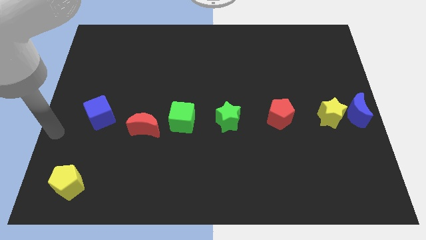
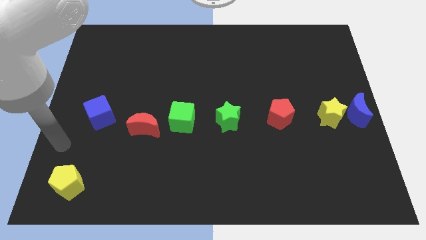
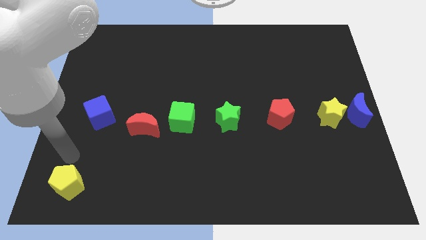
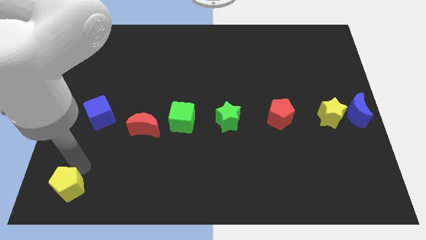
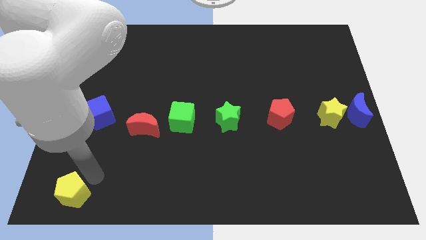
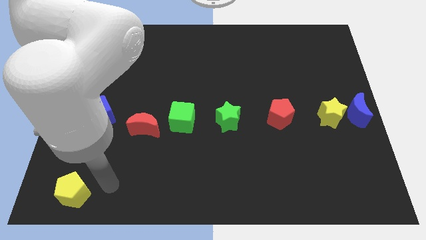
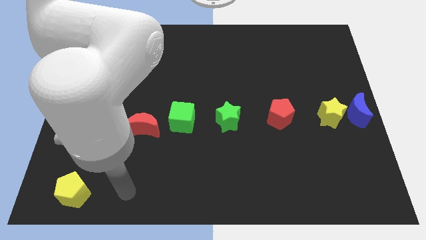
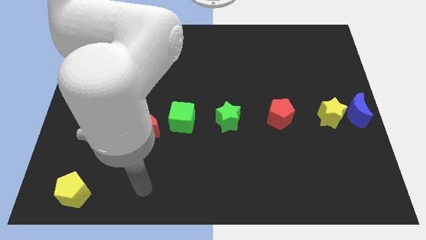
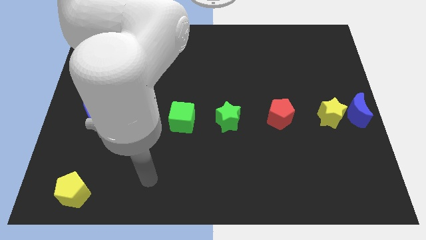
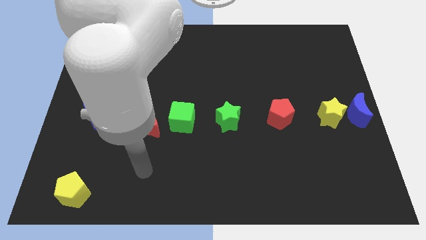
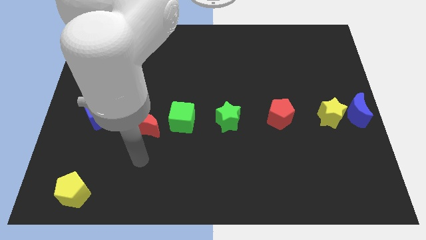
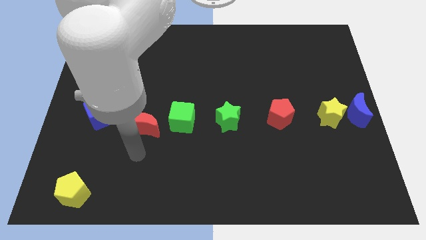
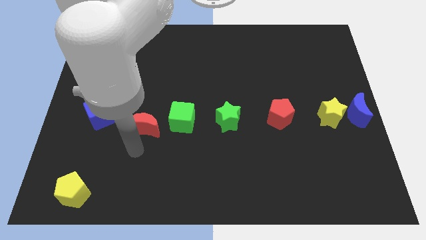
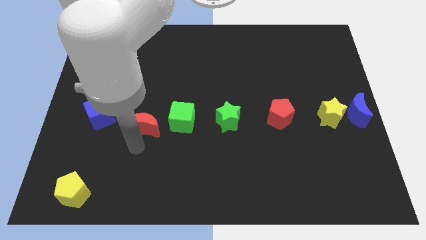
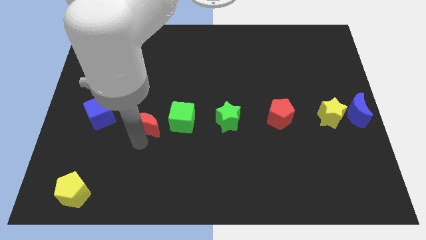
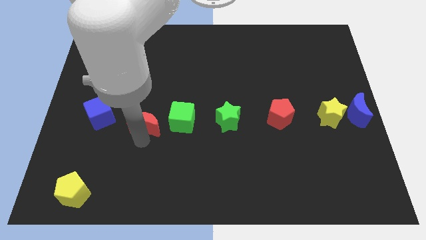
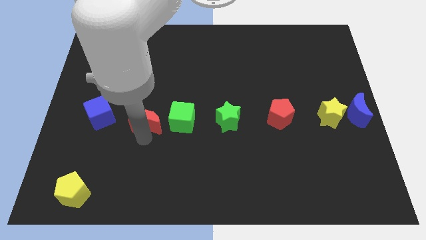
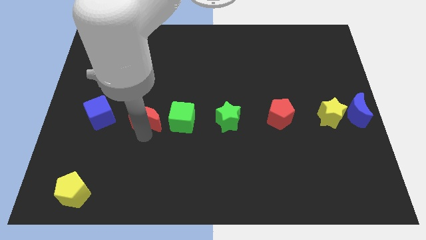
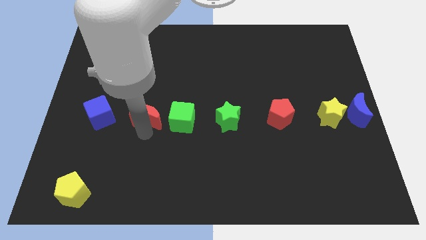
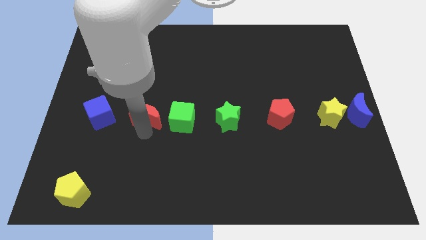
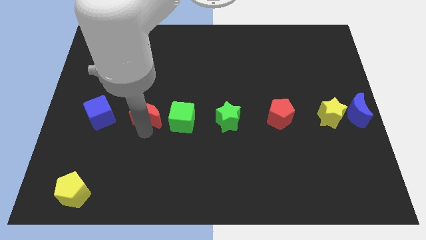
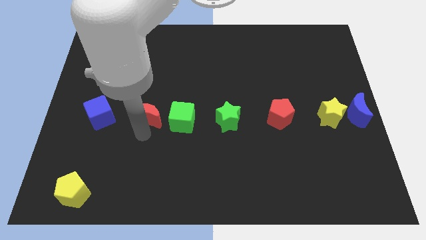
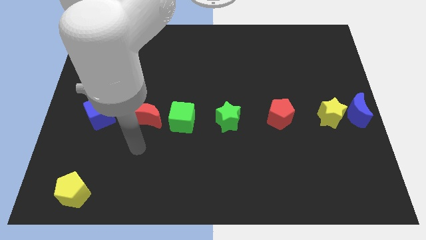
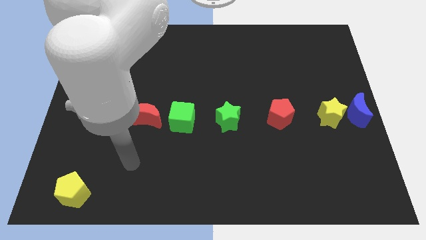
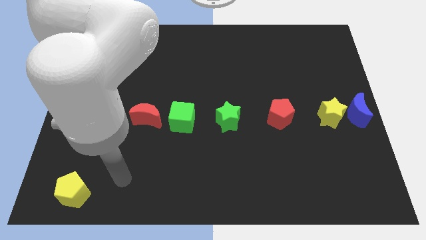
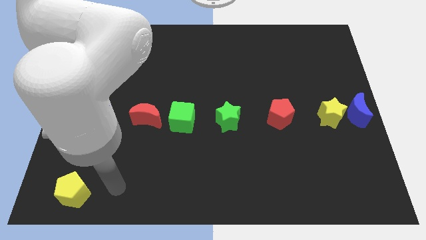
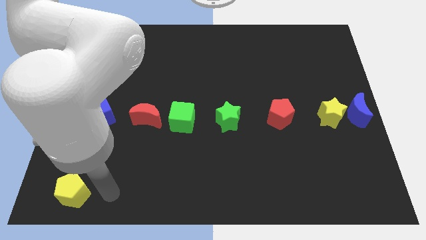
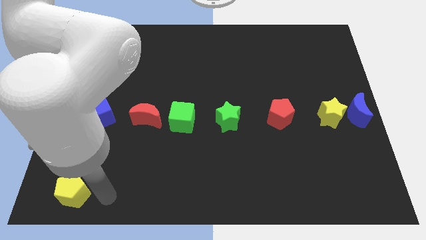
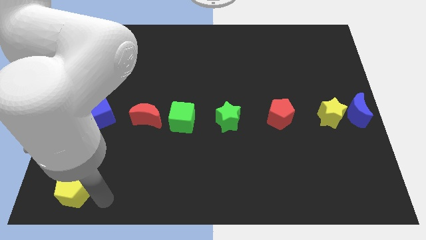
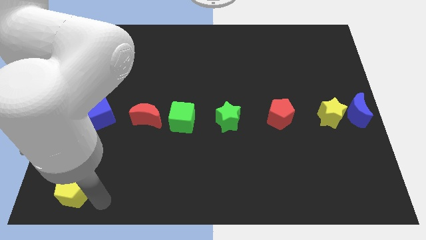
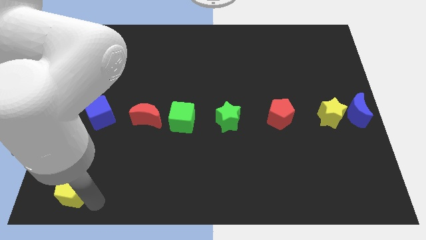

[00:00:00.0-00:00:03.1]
place red crescent in between blue cube and green cube

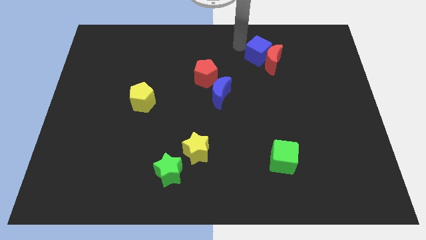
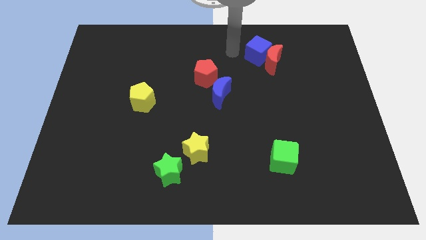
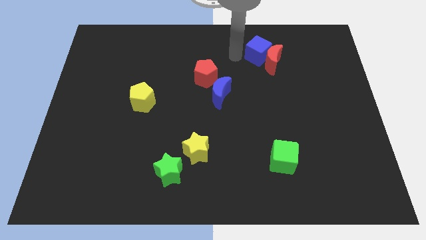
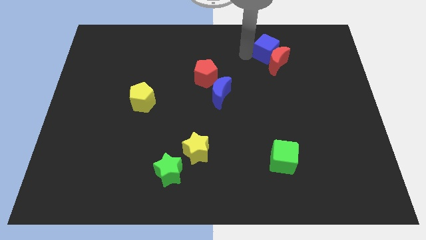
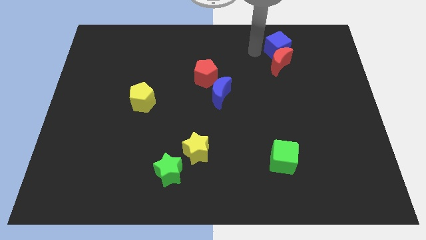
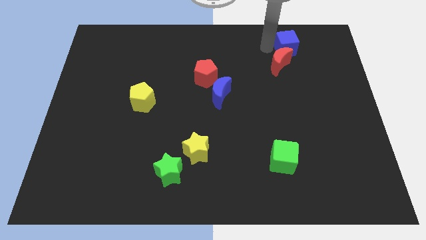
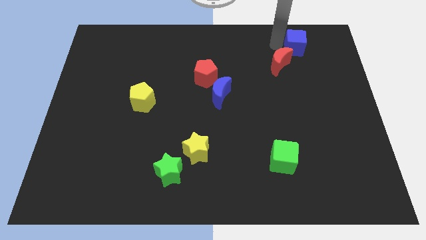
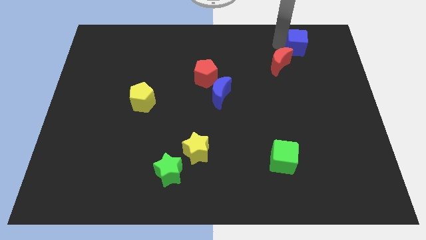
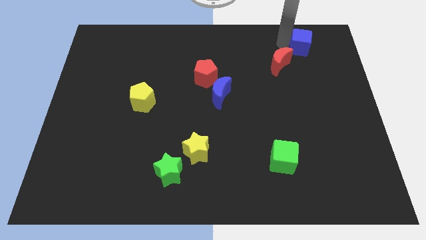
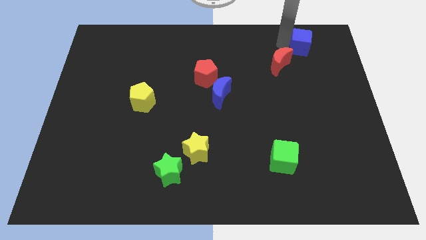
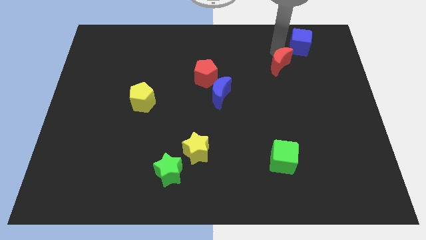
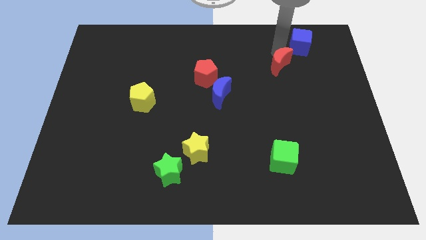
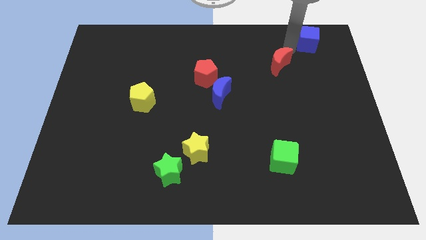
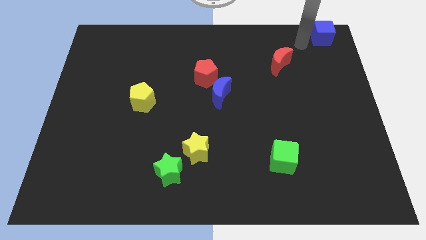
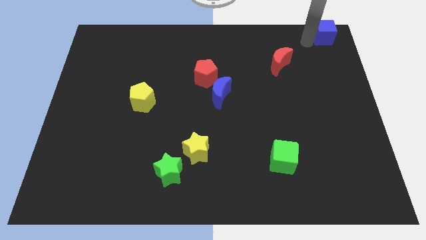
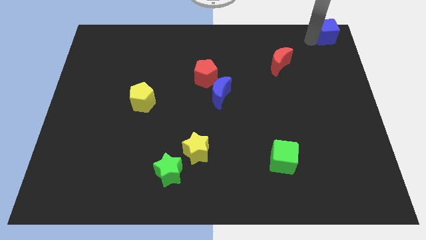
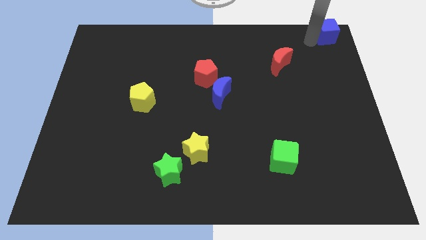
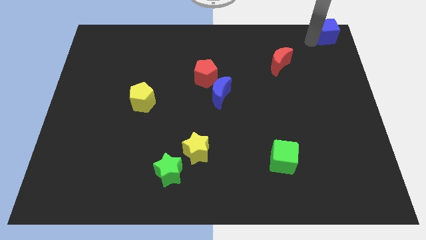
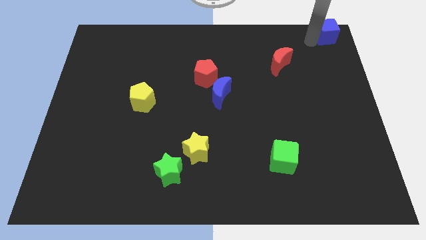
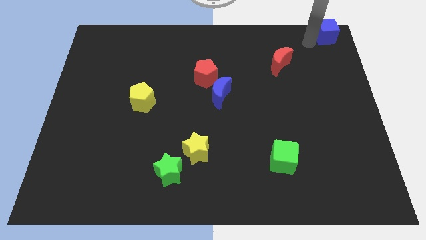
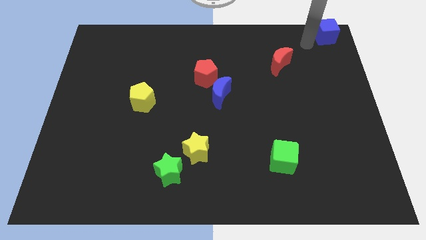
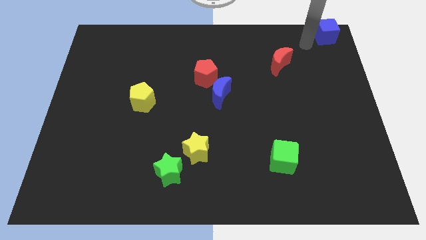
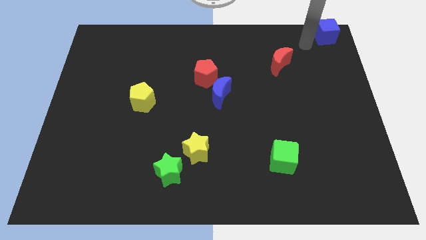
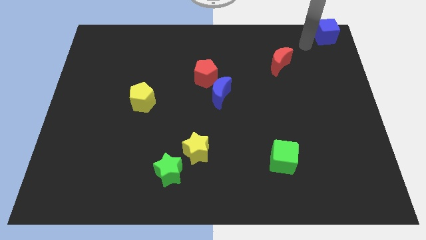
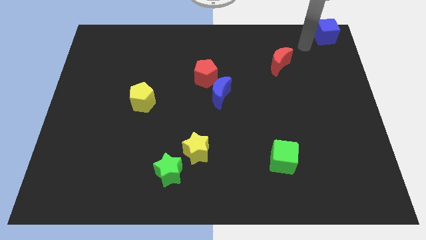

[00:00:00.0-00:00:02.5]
move the blue cube to the top right corner of the board

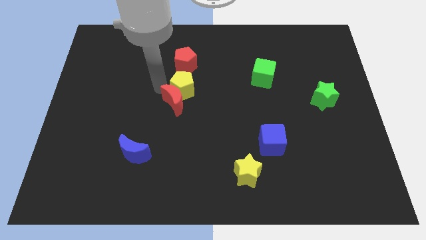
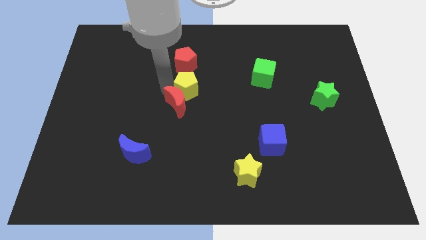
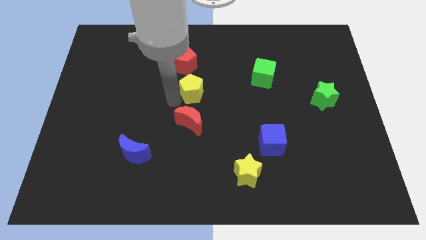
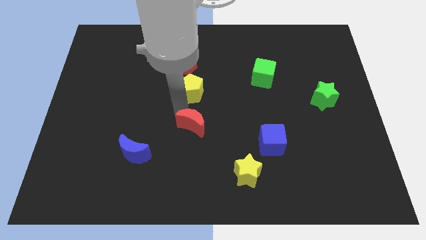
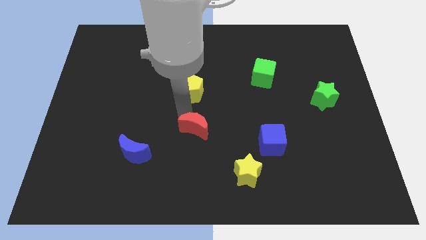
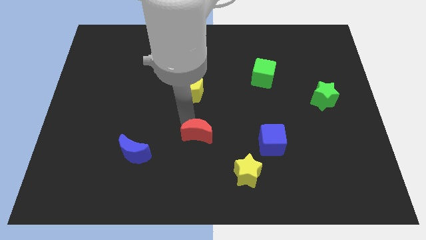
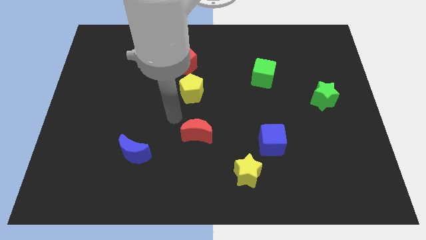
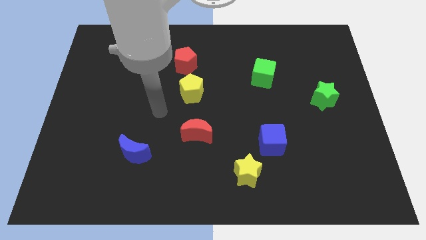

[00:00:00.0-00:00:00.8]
place the red moon in between the yellow star and yellow pentagon

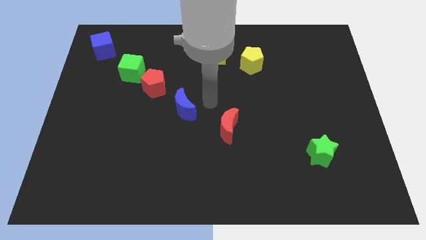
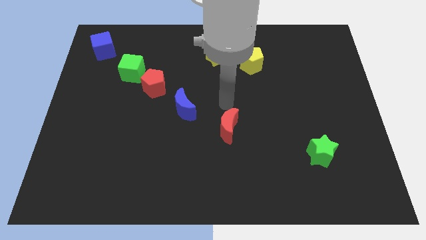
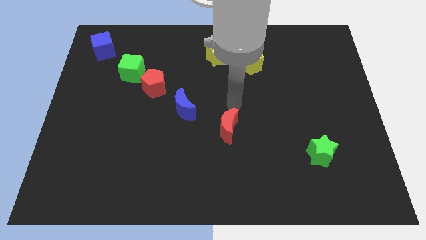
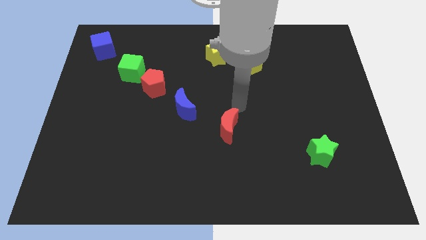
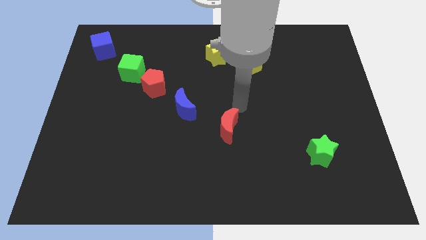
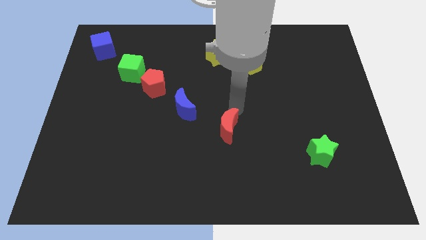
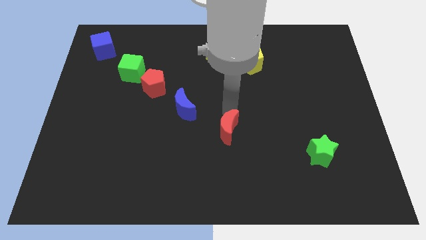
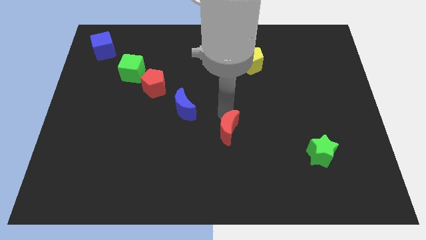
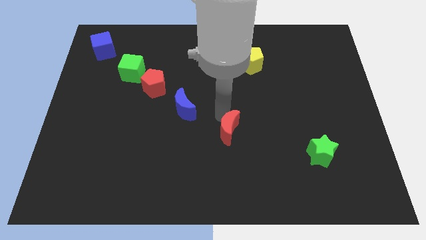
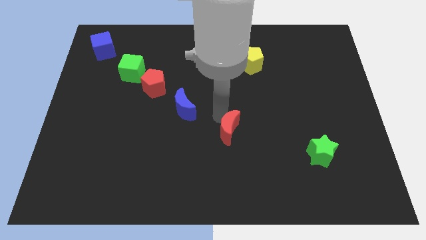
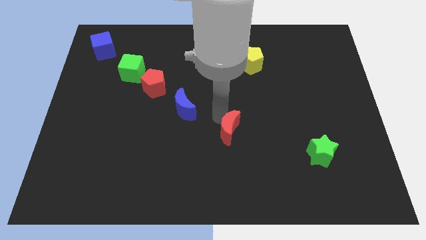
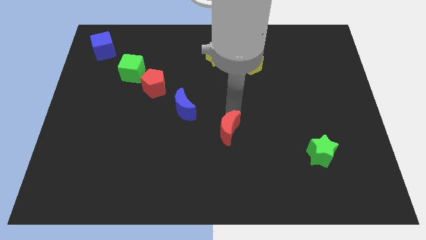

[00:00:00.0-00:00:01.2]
touch the red moon

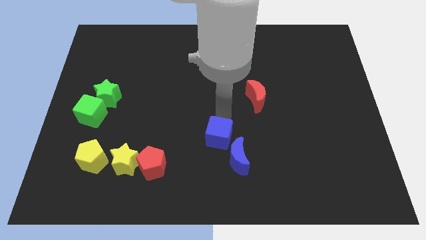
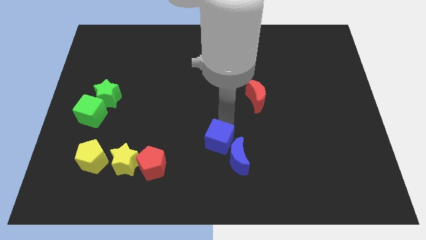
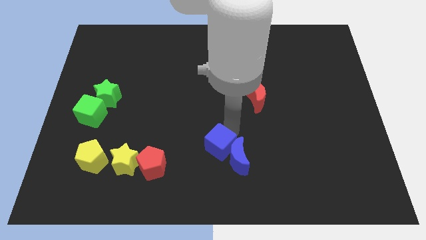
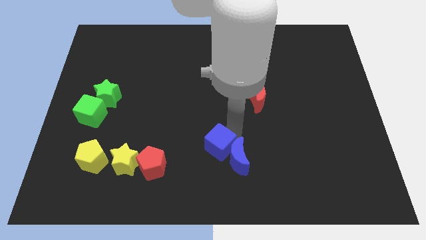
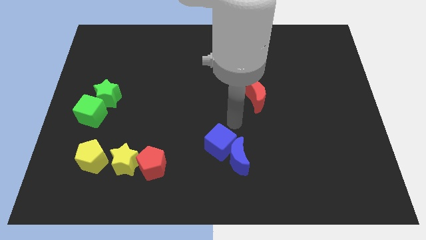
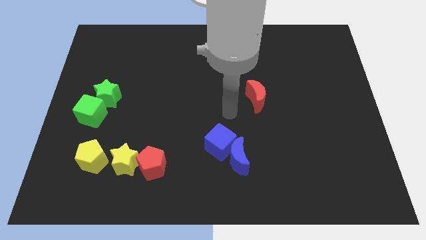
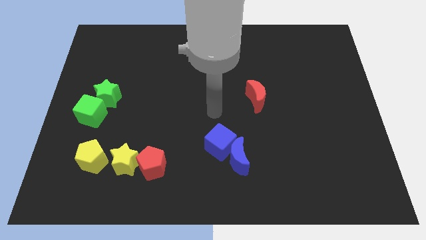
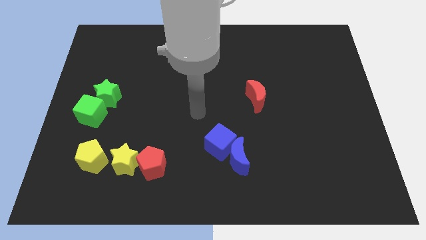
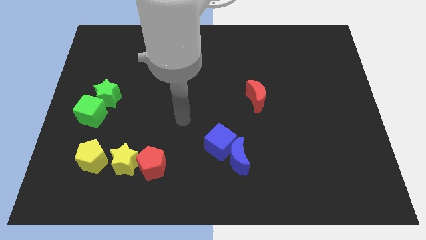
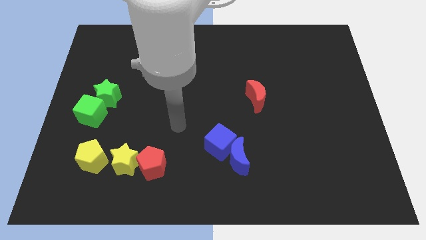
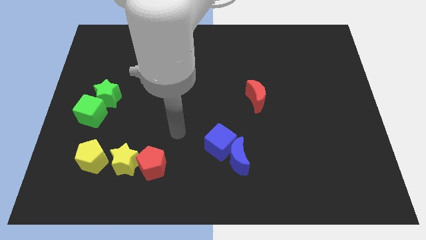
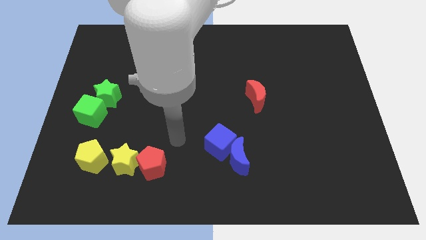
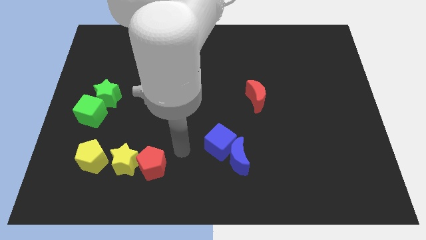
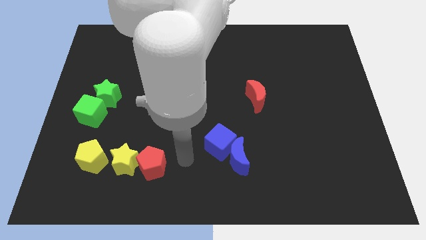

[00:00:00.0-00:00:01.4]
move blue cube close to blue crescent
